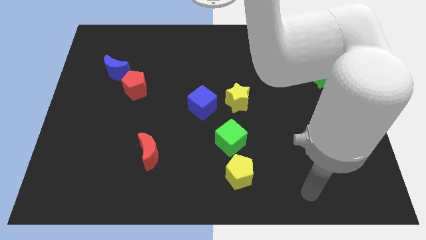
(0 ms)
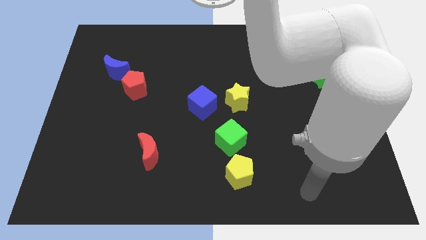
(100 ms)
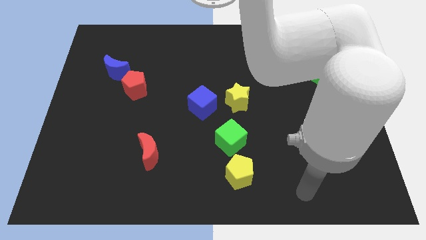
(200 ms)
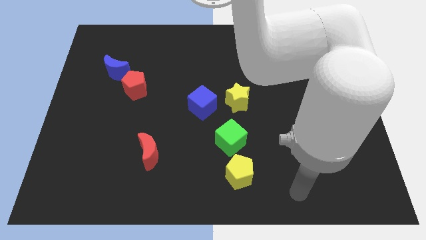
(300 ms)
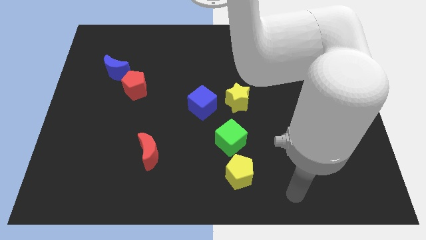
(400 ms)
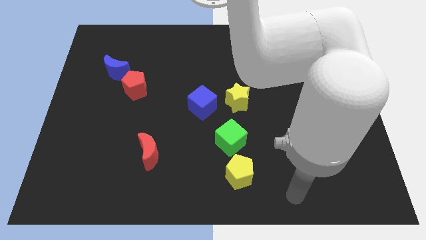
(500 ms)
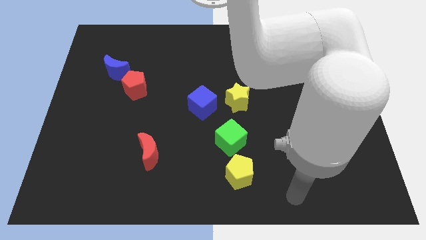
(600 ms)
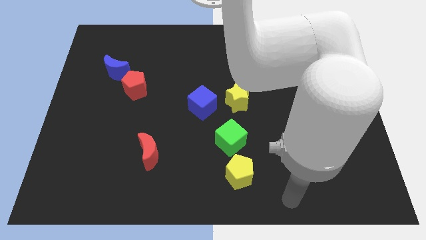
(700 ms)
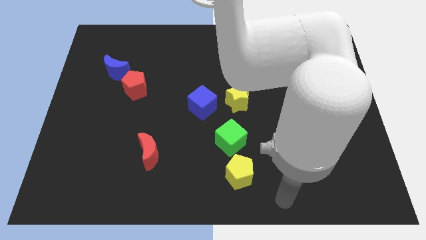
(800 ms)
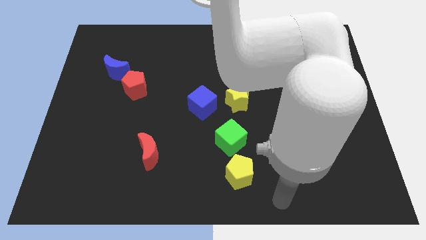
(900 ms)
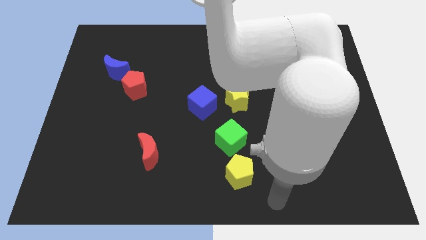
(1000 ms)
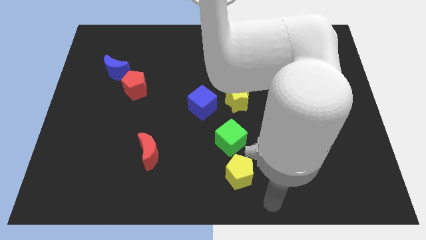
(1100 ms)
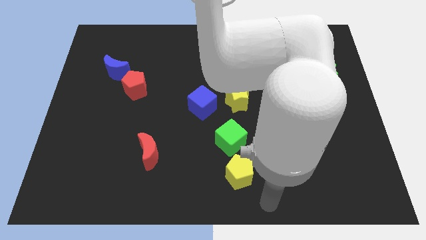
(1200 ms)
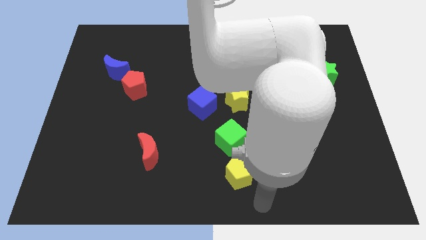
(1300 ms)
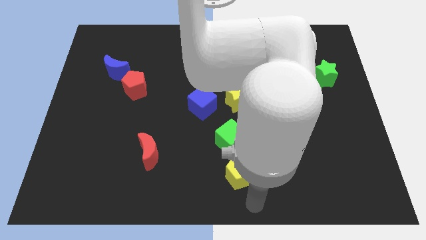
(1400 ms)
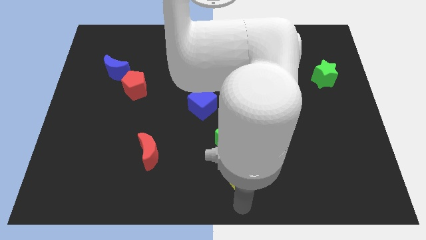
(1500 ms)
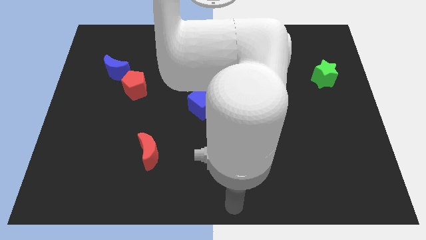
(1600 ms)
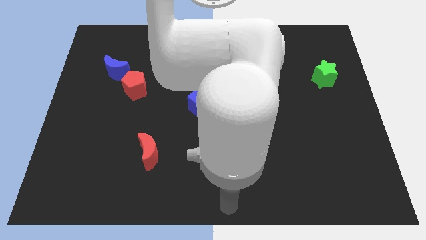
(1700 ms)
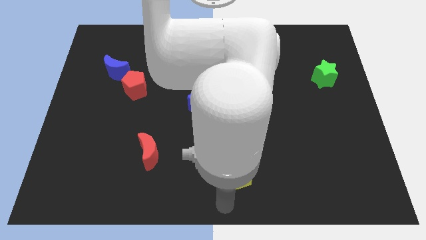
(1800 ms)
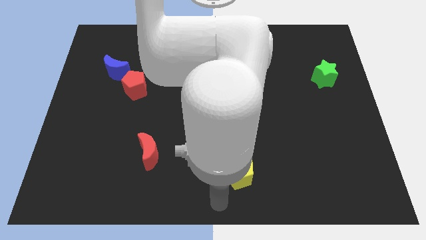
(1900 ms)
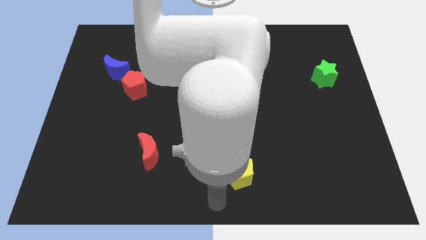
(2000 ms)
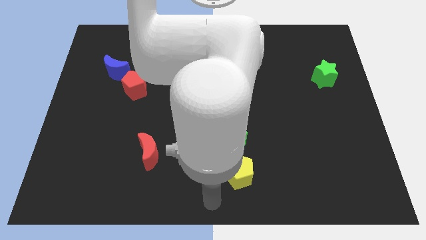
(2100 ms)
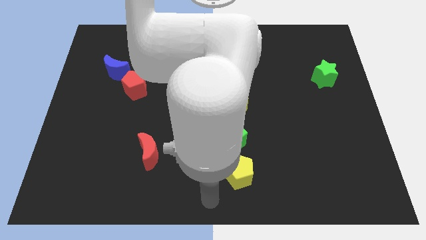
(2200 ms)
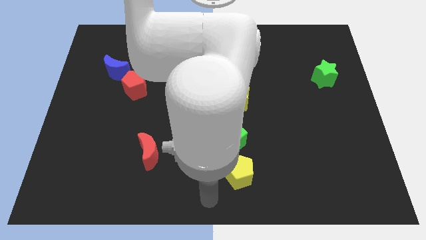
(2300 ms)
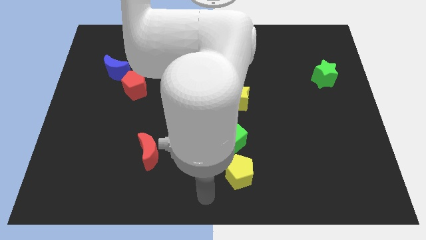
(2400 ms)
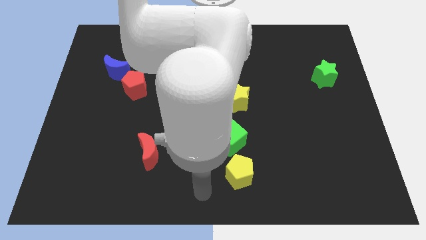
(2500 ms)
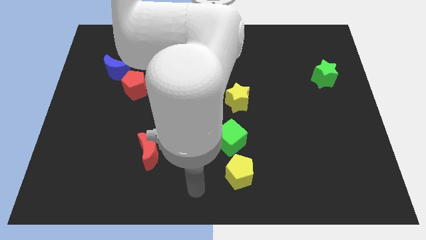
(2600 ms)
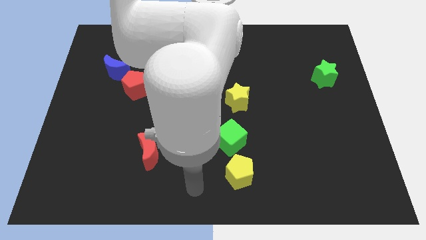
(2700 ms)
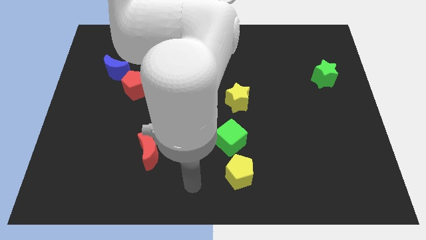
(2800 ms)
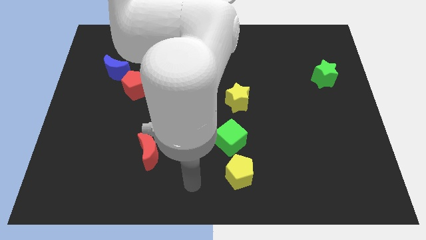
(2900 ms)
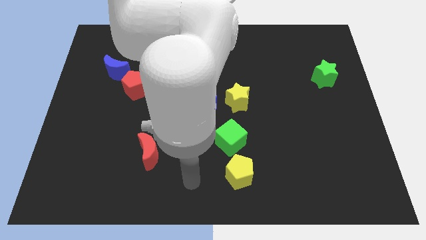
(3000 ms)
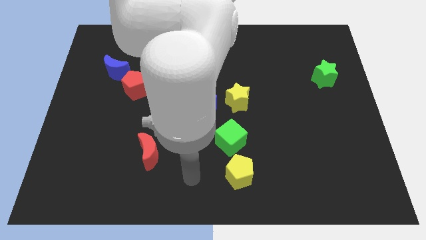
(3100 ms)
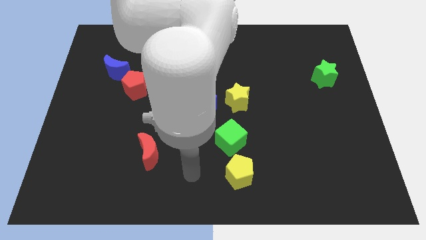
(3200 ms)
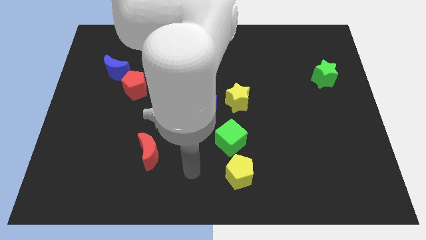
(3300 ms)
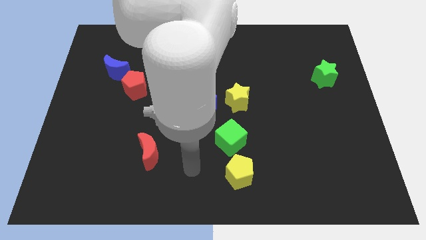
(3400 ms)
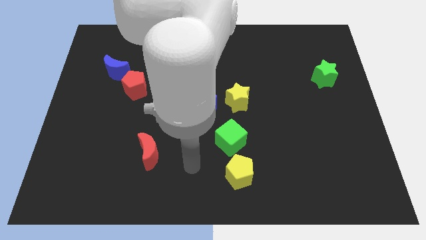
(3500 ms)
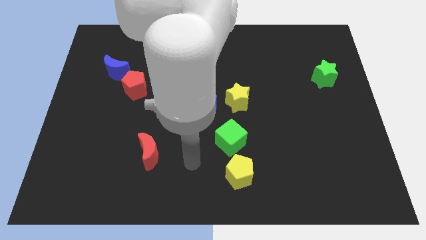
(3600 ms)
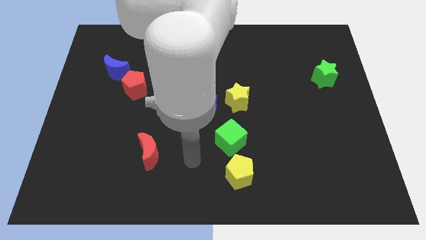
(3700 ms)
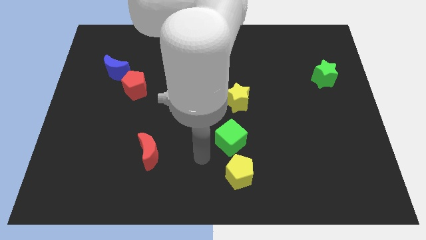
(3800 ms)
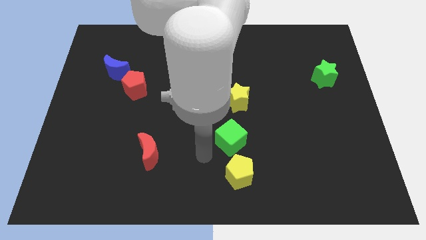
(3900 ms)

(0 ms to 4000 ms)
move the arm to the left of the green cube

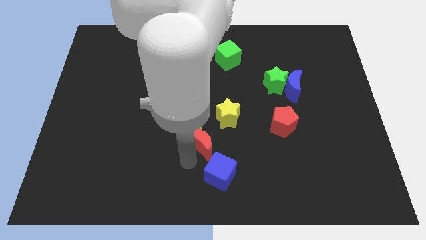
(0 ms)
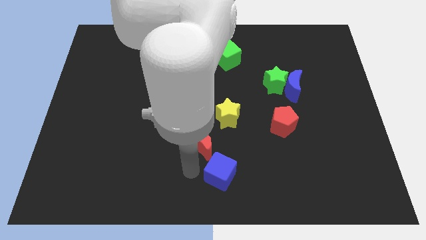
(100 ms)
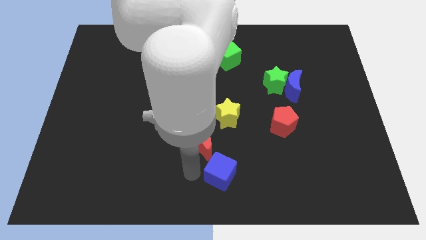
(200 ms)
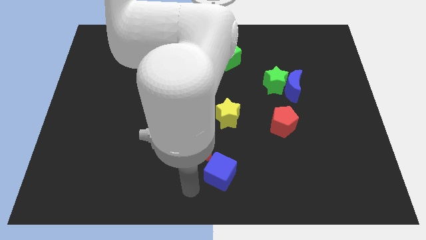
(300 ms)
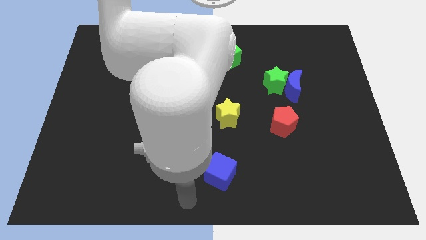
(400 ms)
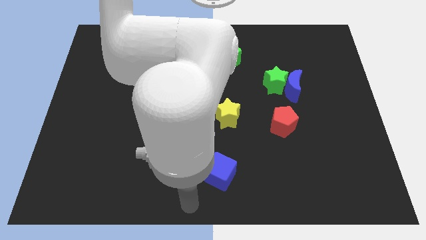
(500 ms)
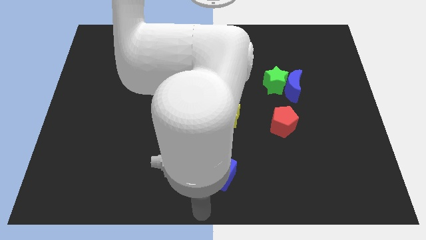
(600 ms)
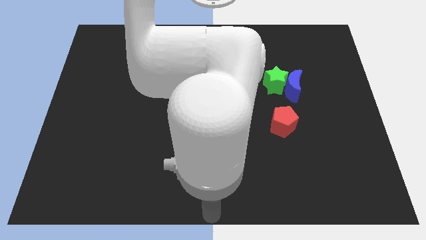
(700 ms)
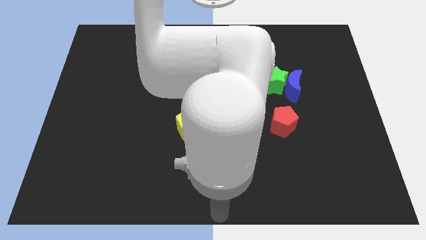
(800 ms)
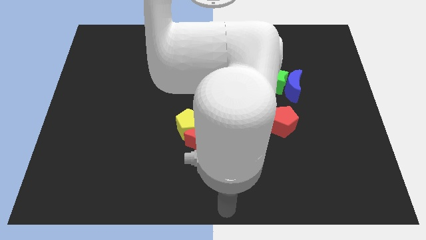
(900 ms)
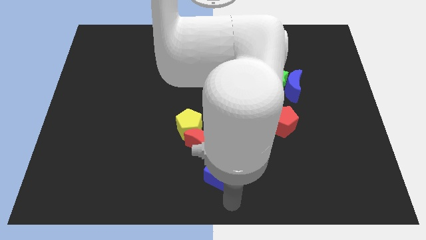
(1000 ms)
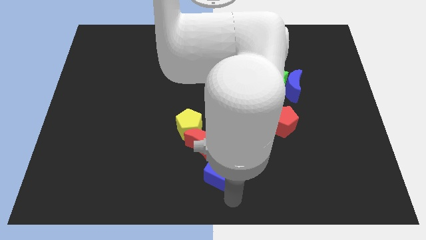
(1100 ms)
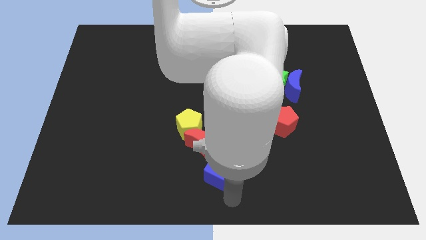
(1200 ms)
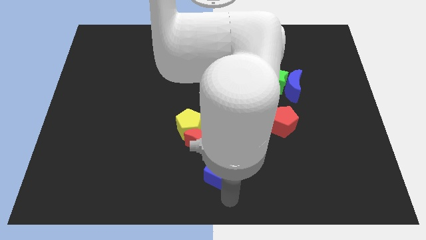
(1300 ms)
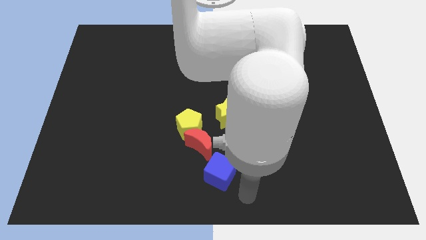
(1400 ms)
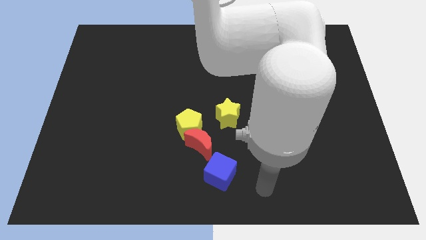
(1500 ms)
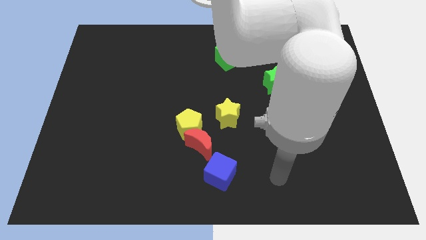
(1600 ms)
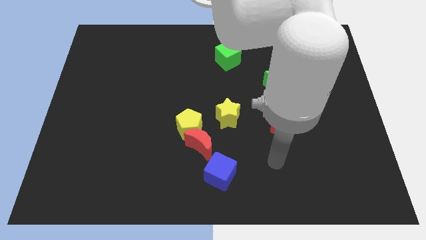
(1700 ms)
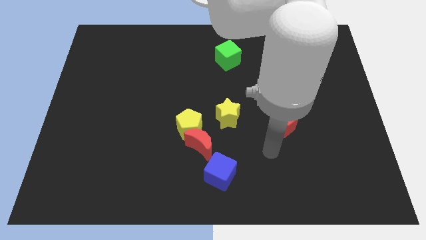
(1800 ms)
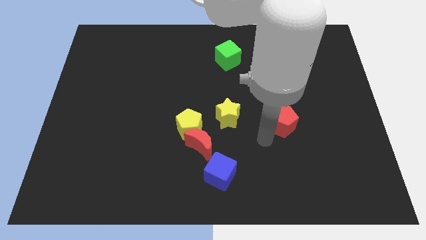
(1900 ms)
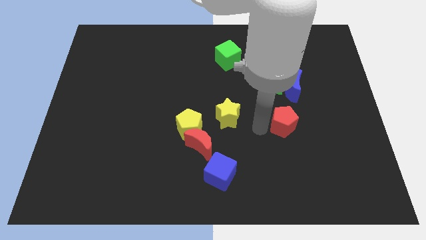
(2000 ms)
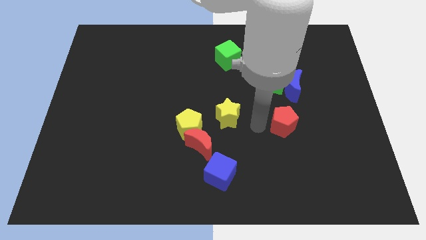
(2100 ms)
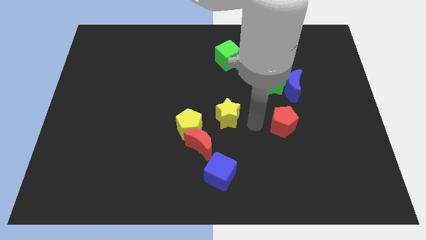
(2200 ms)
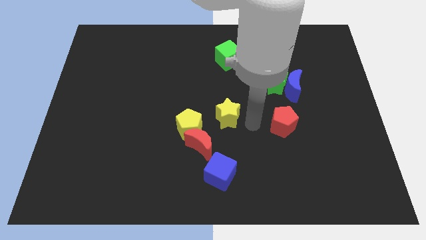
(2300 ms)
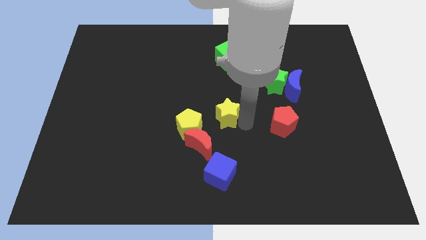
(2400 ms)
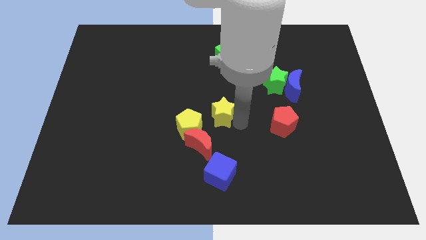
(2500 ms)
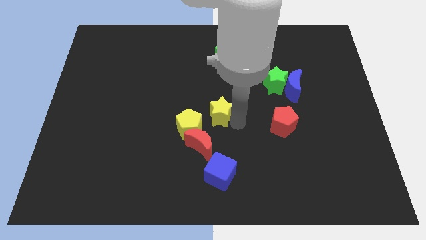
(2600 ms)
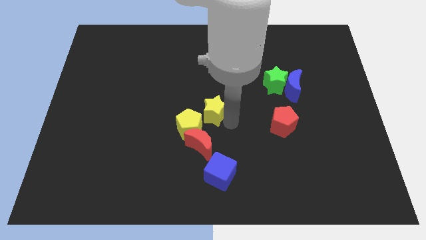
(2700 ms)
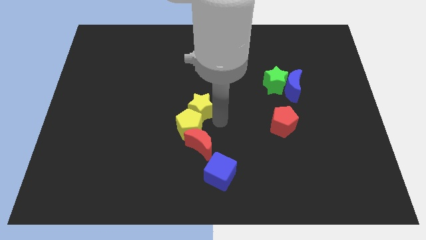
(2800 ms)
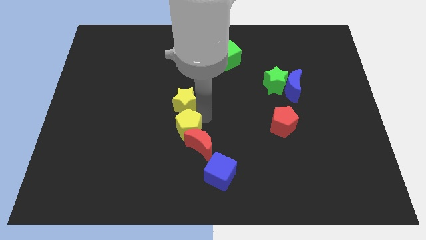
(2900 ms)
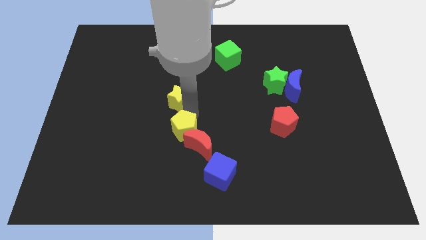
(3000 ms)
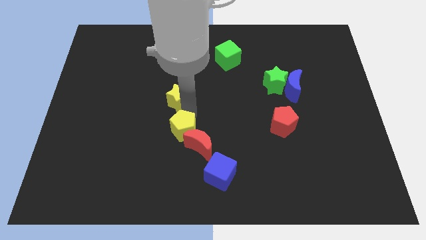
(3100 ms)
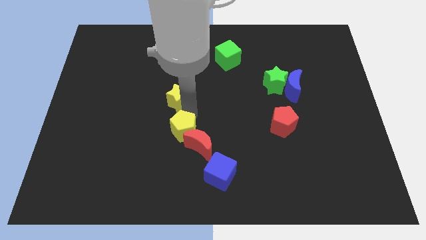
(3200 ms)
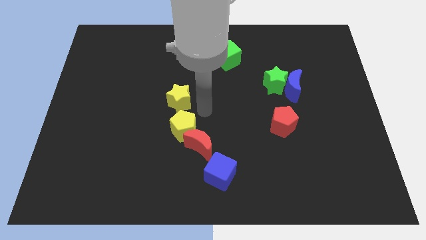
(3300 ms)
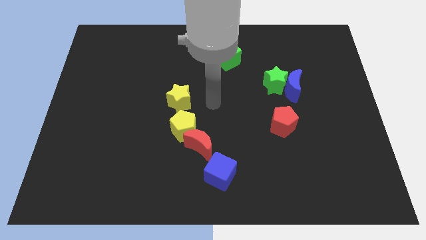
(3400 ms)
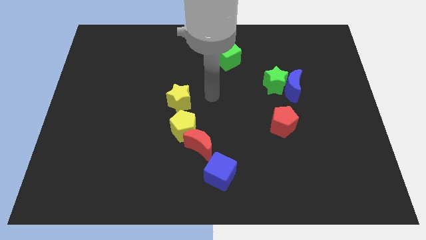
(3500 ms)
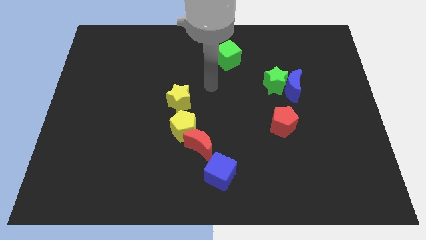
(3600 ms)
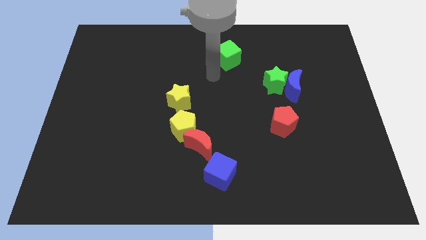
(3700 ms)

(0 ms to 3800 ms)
move the yellow star to the top side of the yellow pentagon

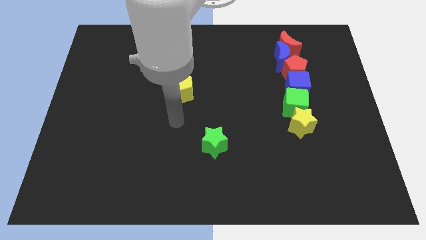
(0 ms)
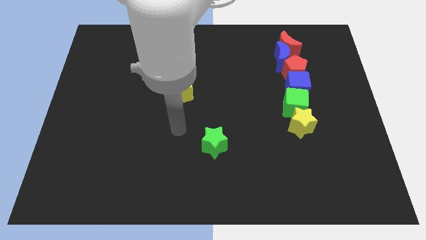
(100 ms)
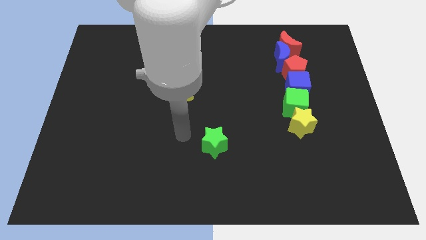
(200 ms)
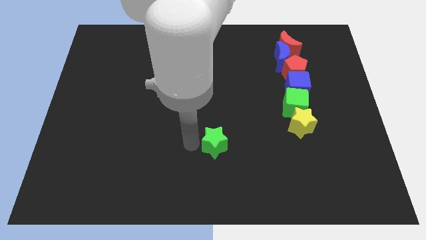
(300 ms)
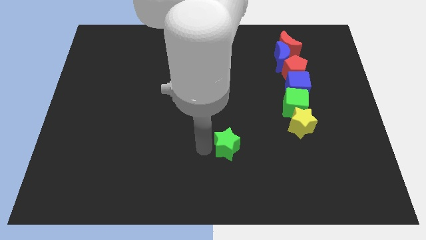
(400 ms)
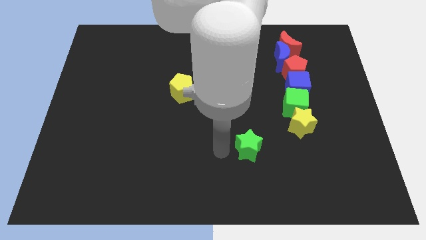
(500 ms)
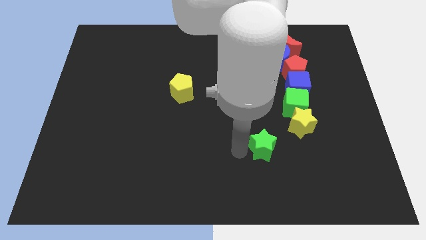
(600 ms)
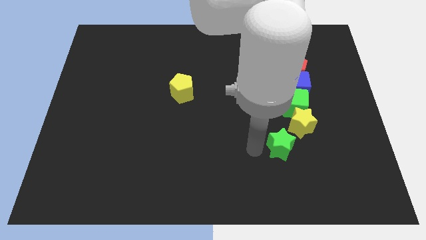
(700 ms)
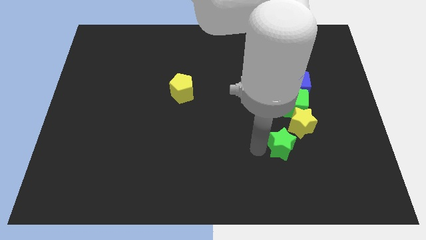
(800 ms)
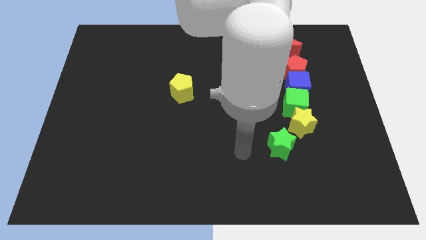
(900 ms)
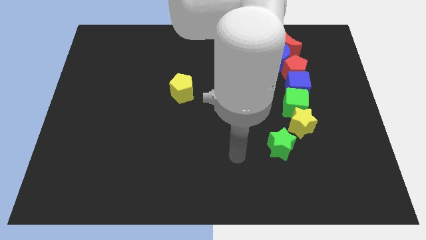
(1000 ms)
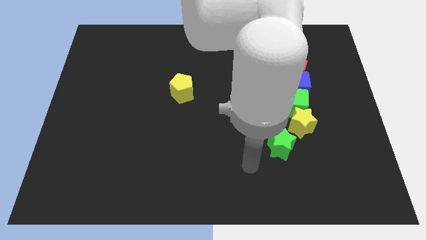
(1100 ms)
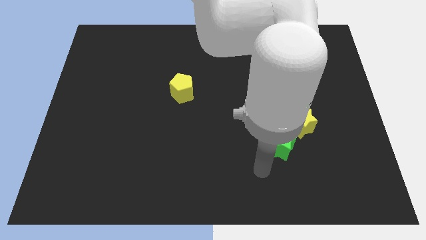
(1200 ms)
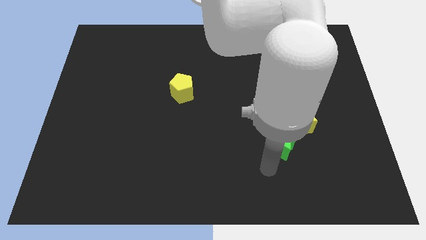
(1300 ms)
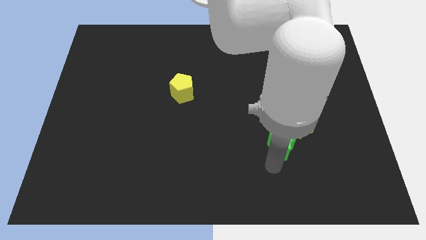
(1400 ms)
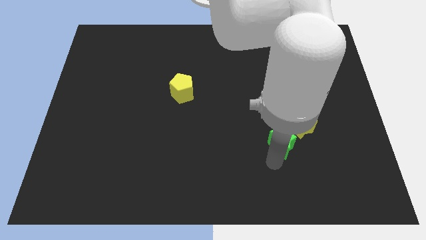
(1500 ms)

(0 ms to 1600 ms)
move the green star to the bottom of the yellow star
